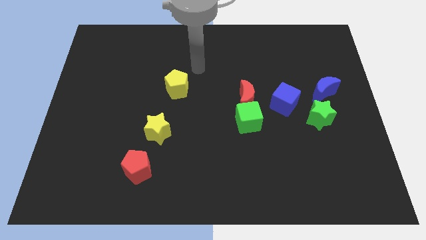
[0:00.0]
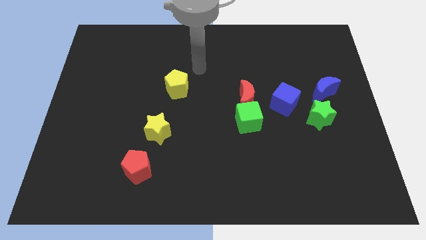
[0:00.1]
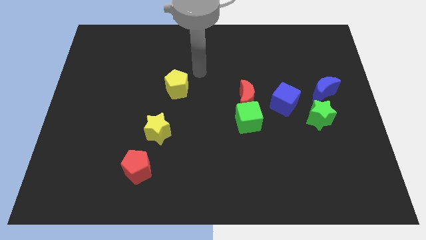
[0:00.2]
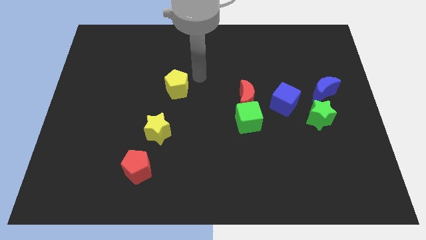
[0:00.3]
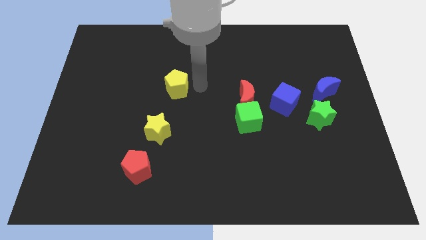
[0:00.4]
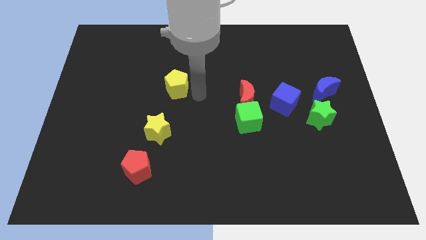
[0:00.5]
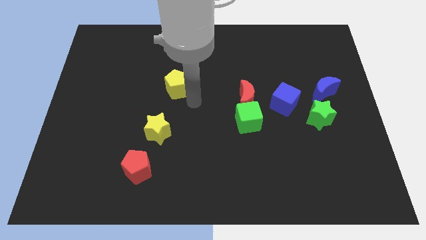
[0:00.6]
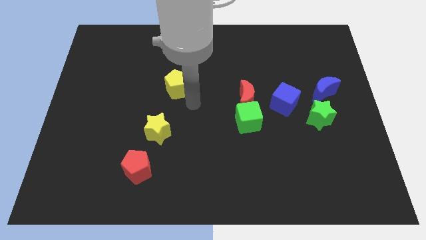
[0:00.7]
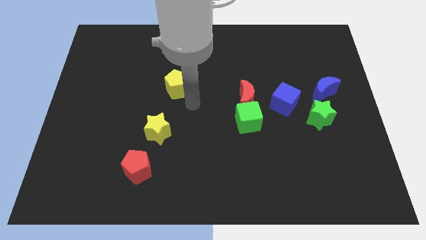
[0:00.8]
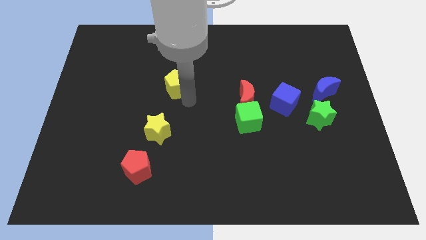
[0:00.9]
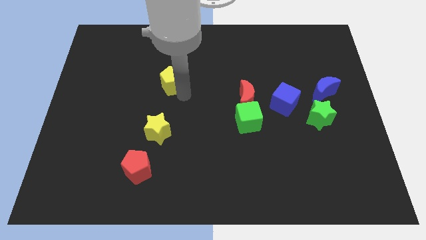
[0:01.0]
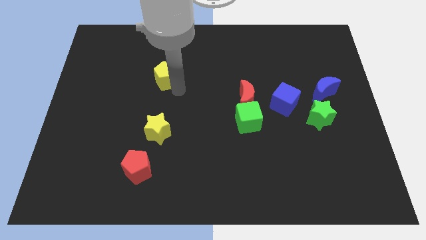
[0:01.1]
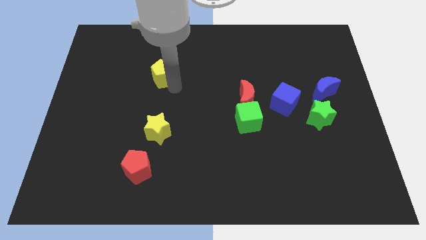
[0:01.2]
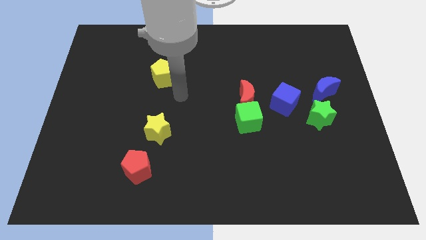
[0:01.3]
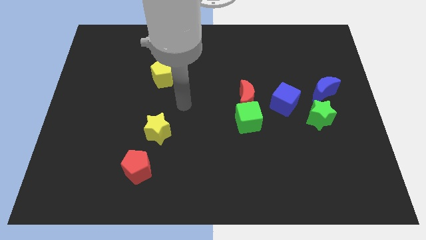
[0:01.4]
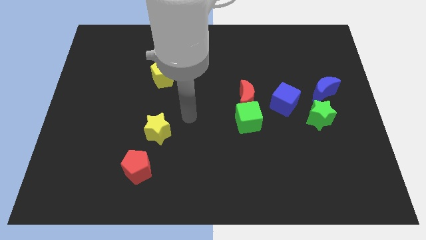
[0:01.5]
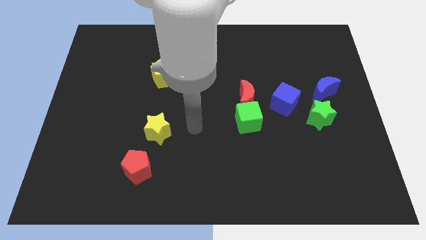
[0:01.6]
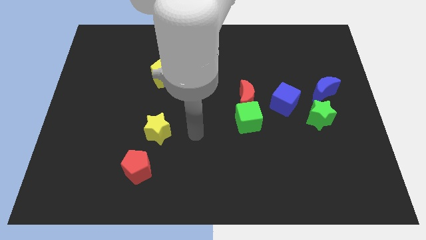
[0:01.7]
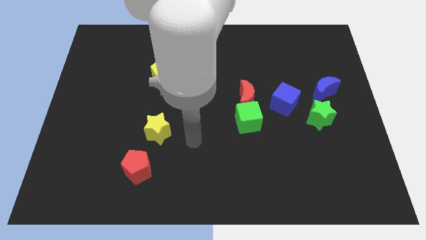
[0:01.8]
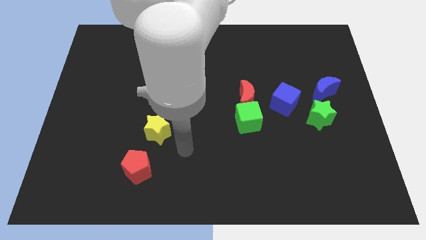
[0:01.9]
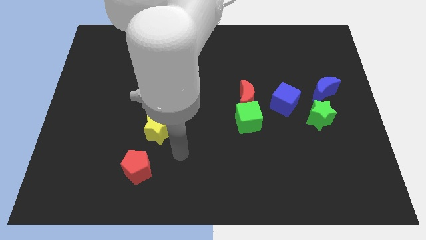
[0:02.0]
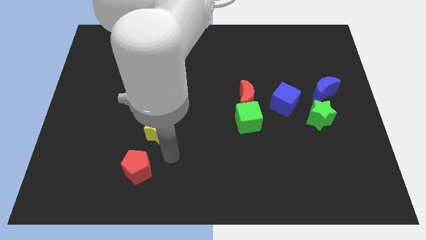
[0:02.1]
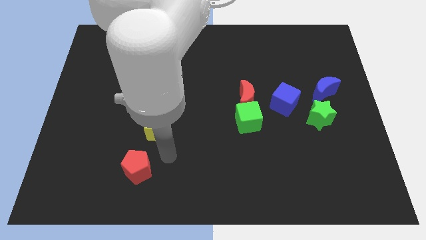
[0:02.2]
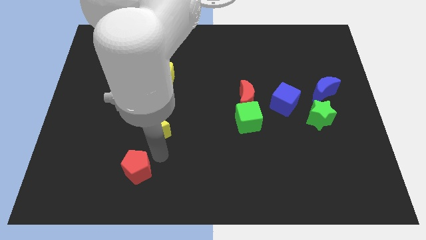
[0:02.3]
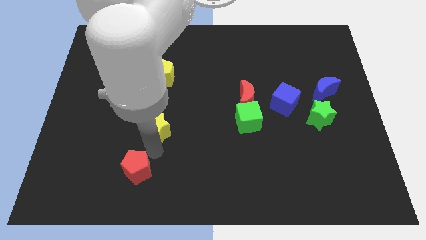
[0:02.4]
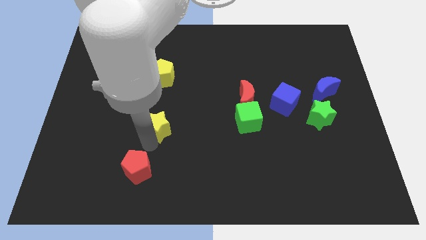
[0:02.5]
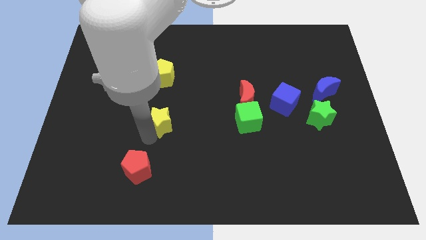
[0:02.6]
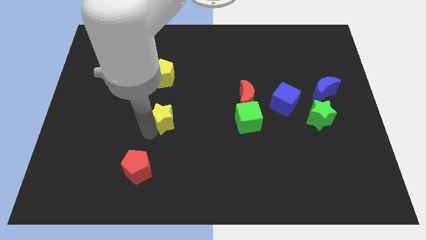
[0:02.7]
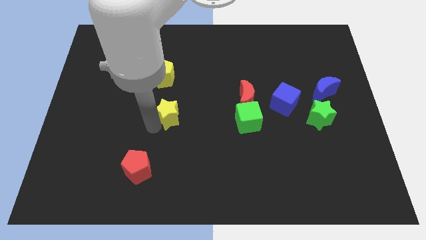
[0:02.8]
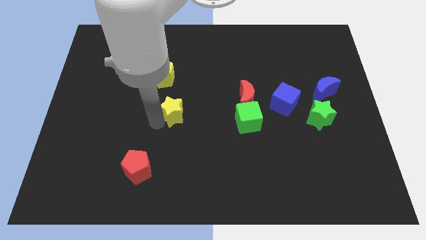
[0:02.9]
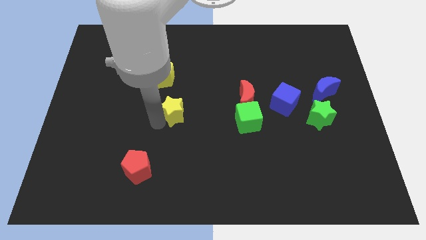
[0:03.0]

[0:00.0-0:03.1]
place the yellow pentagon and yellow star diagonally

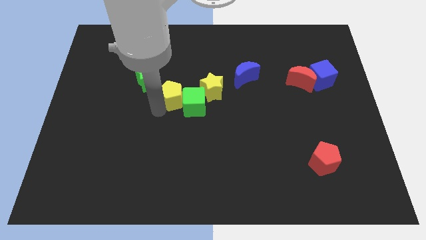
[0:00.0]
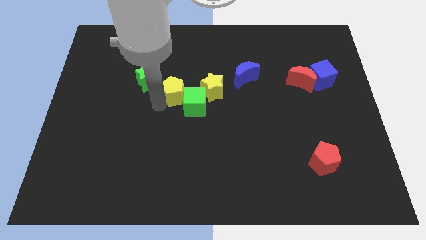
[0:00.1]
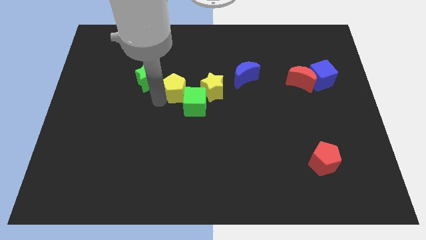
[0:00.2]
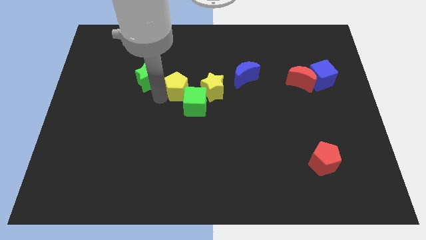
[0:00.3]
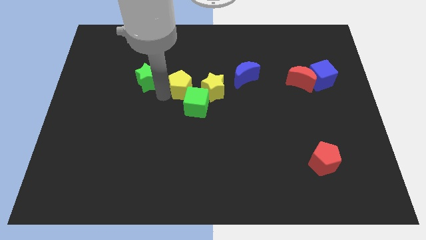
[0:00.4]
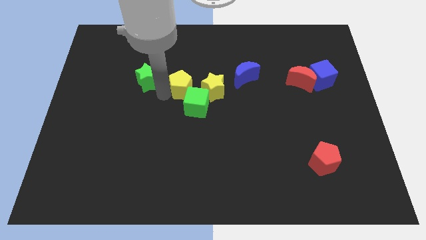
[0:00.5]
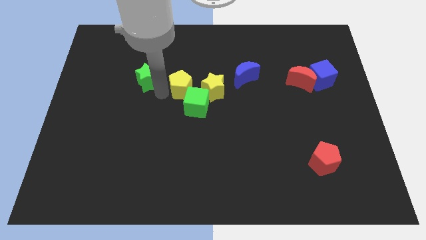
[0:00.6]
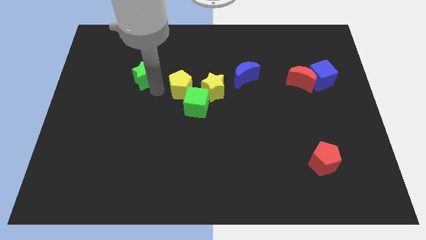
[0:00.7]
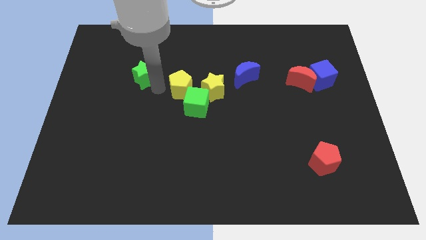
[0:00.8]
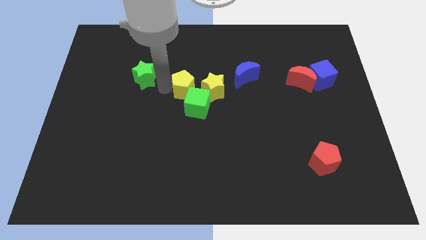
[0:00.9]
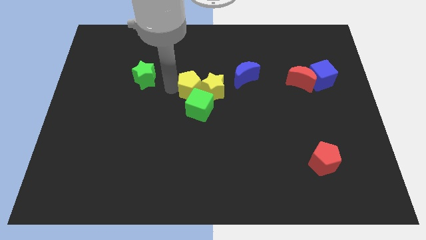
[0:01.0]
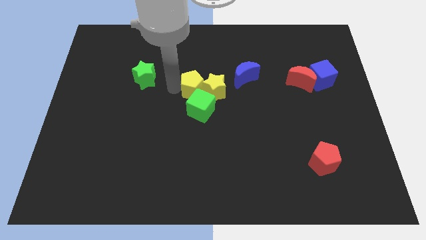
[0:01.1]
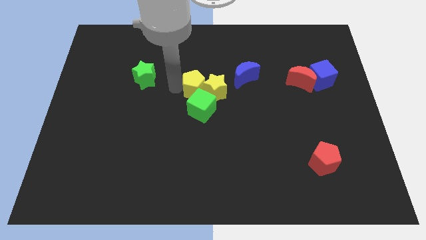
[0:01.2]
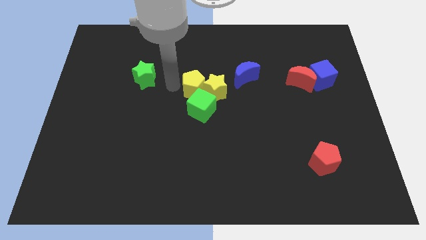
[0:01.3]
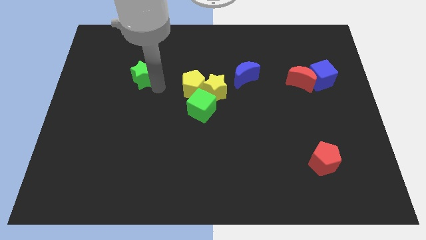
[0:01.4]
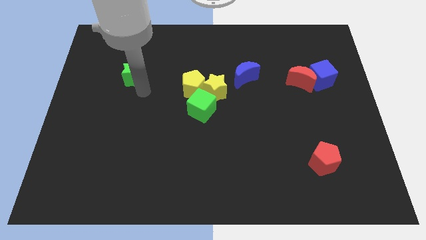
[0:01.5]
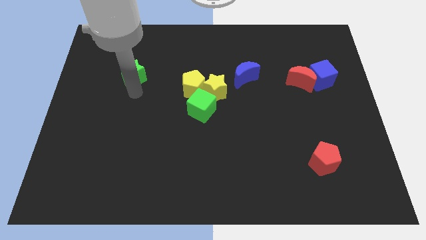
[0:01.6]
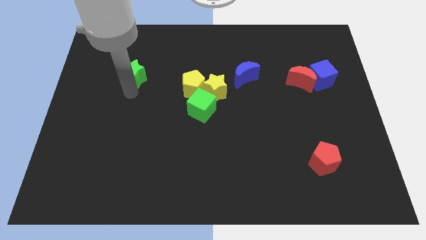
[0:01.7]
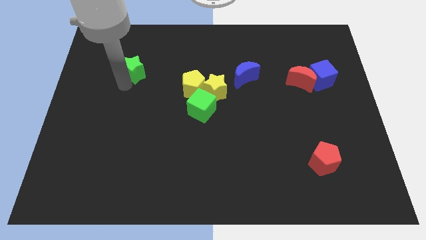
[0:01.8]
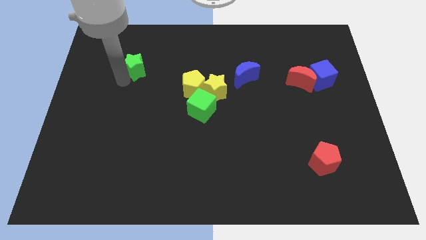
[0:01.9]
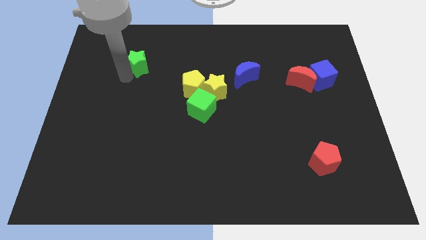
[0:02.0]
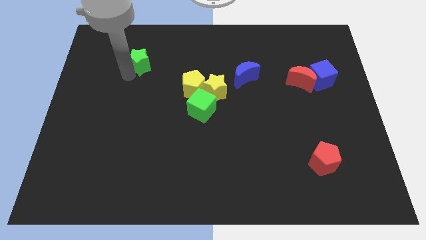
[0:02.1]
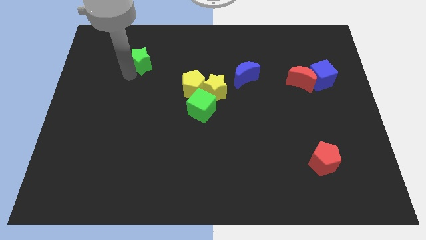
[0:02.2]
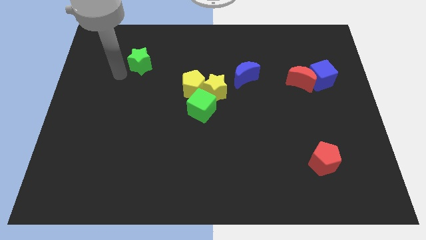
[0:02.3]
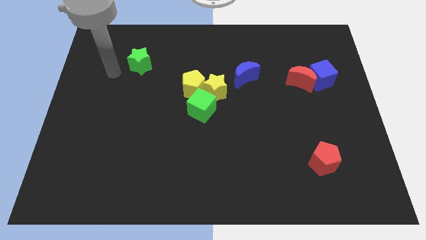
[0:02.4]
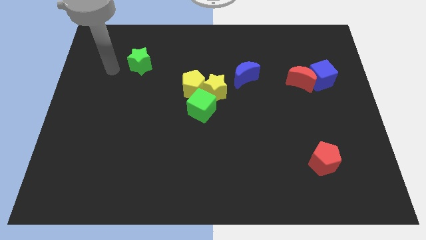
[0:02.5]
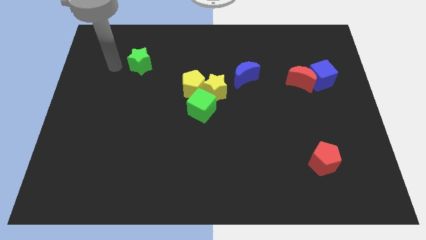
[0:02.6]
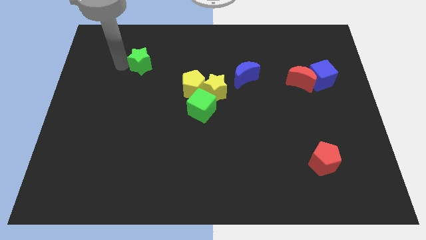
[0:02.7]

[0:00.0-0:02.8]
push green star towards top of the board

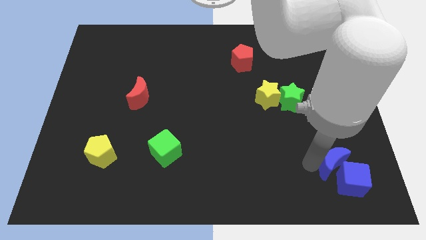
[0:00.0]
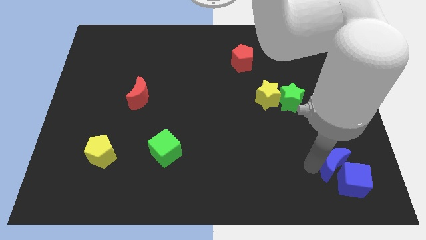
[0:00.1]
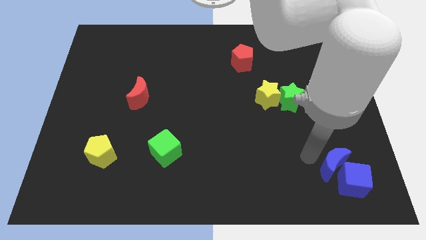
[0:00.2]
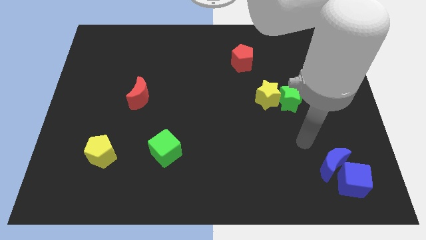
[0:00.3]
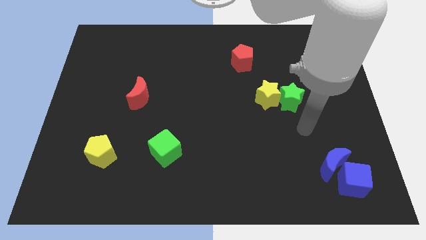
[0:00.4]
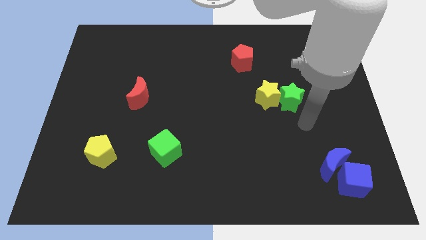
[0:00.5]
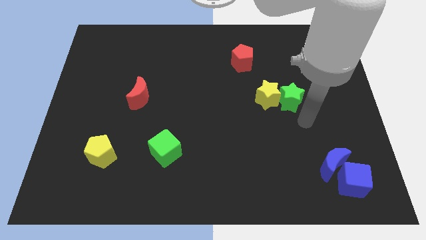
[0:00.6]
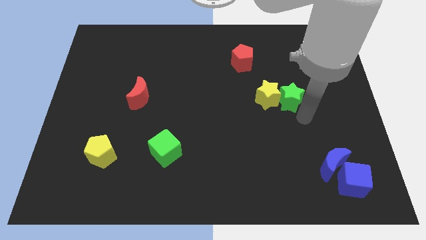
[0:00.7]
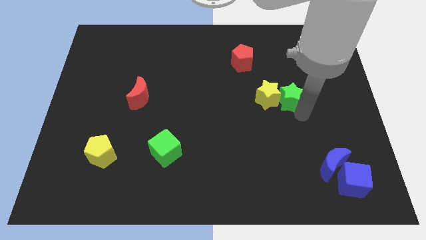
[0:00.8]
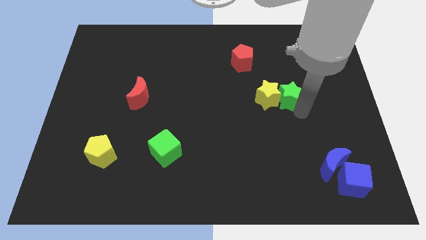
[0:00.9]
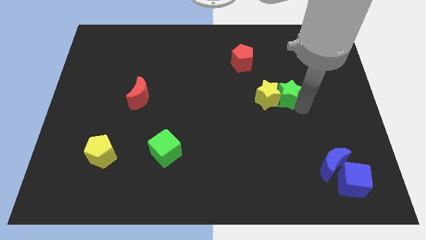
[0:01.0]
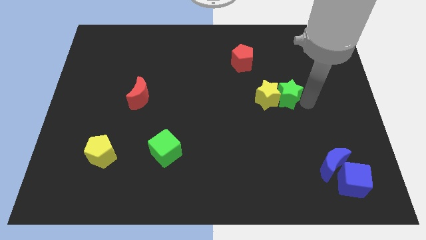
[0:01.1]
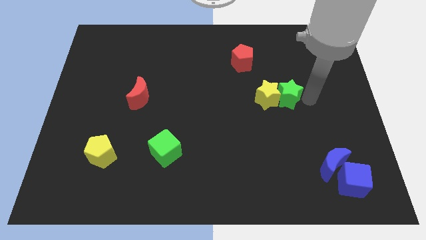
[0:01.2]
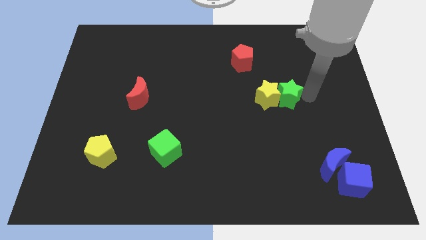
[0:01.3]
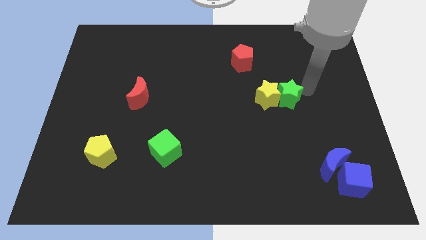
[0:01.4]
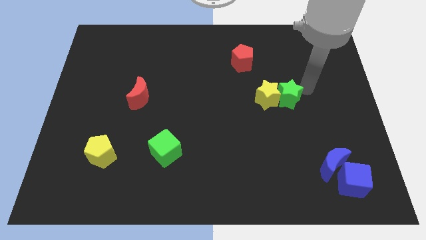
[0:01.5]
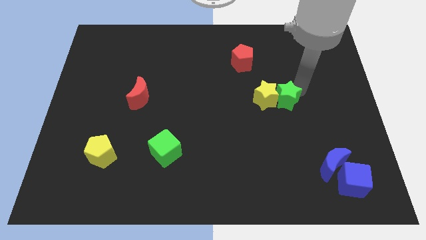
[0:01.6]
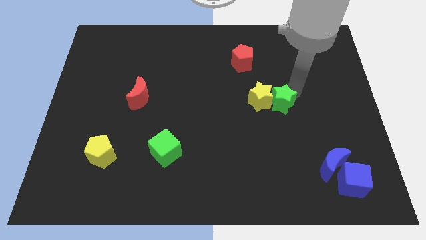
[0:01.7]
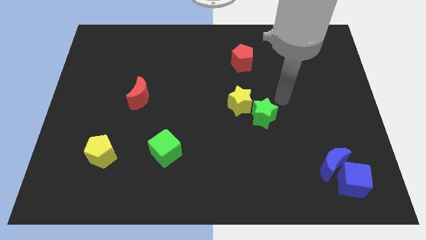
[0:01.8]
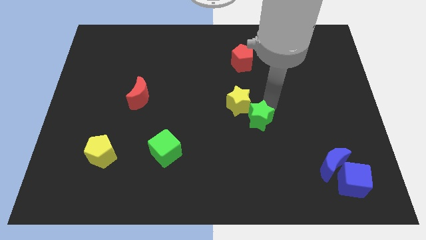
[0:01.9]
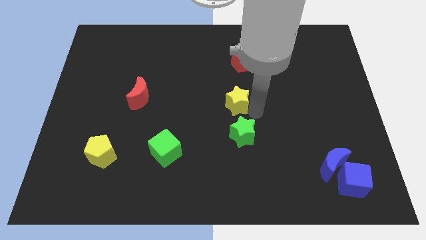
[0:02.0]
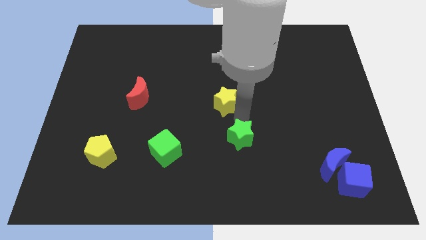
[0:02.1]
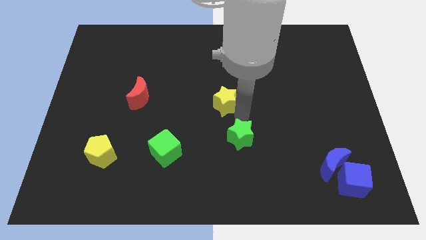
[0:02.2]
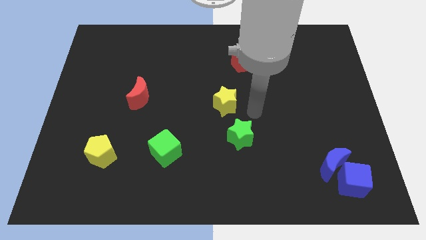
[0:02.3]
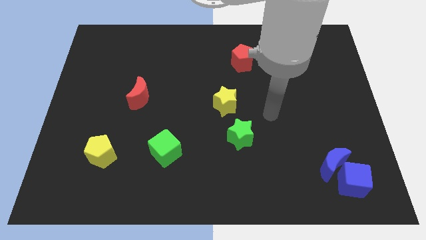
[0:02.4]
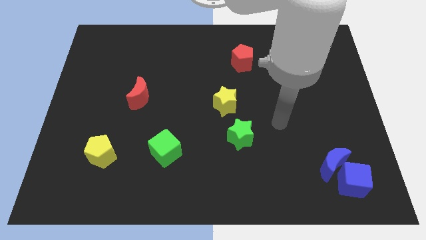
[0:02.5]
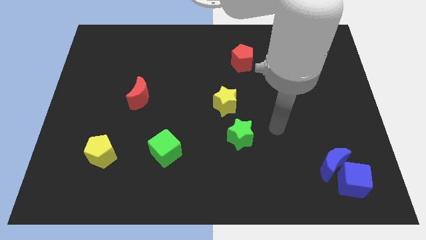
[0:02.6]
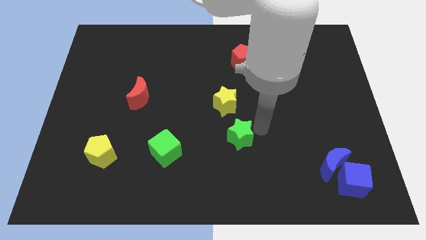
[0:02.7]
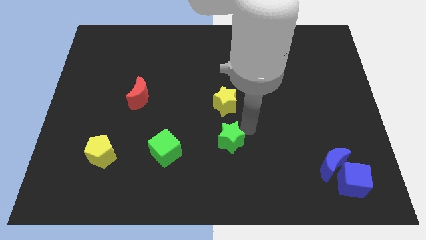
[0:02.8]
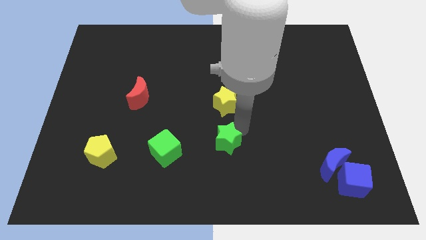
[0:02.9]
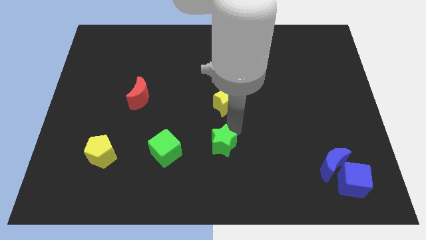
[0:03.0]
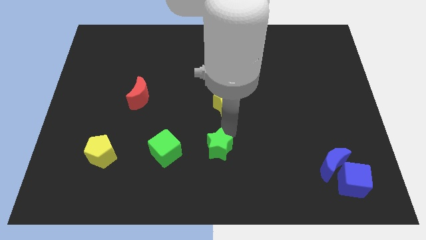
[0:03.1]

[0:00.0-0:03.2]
place green star to the bottom of yellow star
